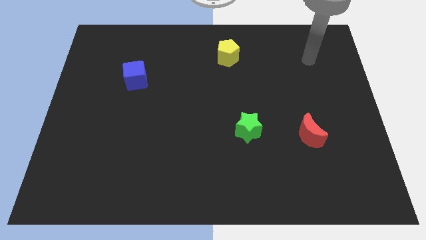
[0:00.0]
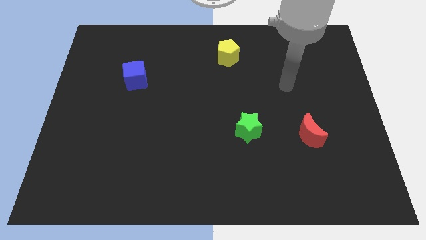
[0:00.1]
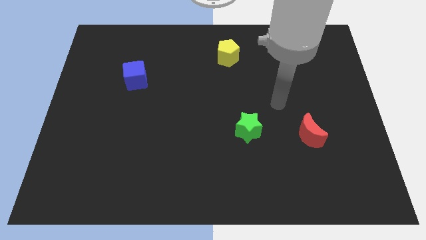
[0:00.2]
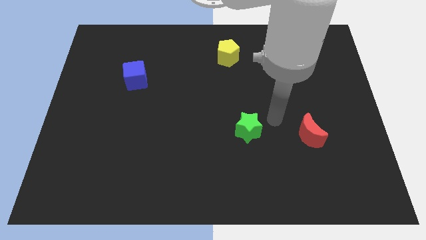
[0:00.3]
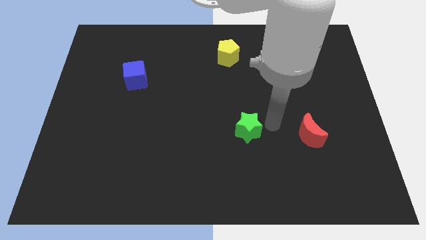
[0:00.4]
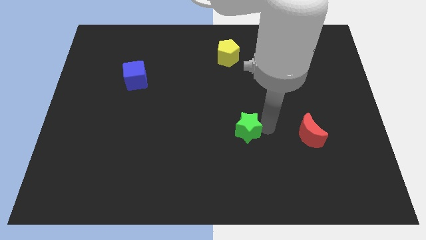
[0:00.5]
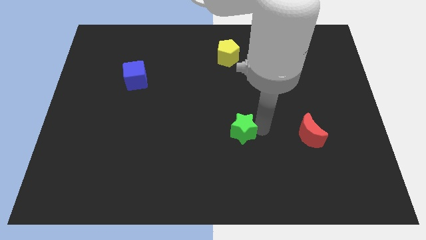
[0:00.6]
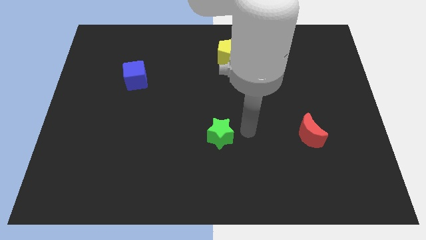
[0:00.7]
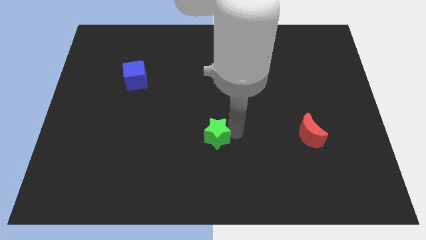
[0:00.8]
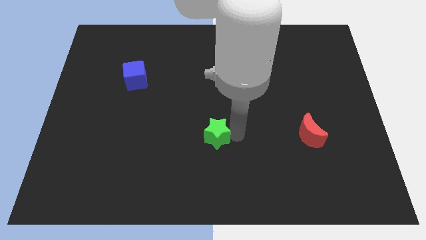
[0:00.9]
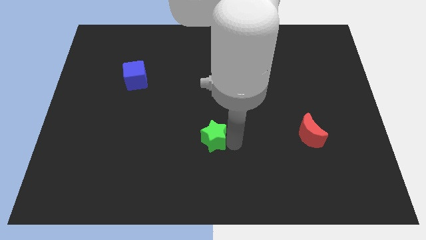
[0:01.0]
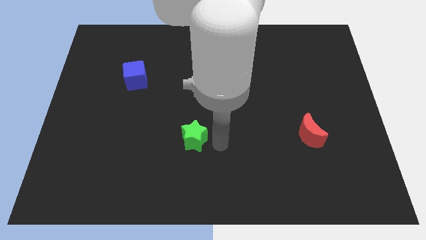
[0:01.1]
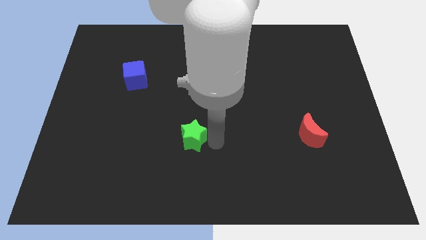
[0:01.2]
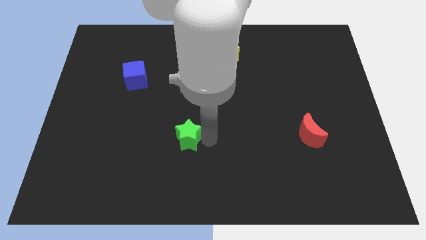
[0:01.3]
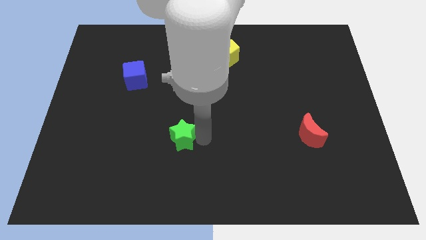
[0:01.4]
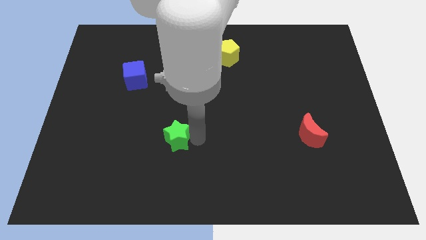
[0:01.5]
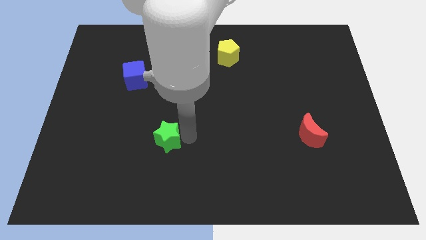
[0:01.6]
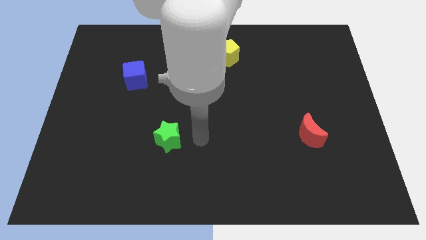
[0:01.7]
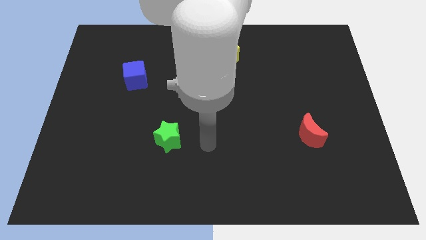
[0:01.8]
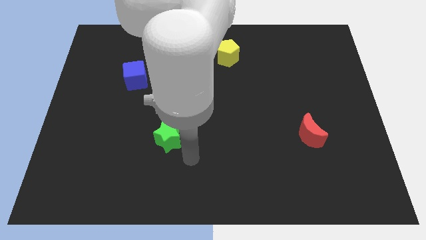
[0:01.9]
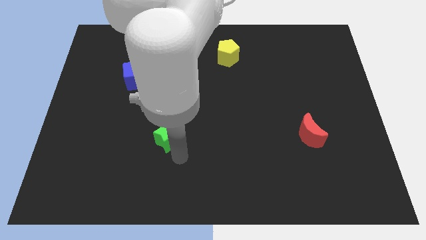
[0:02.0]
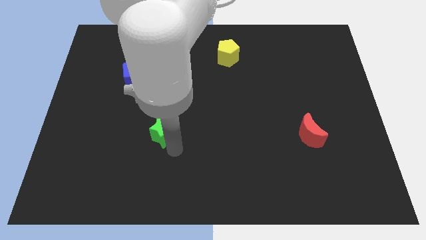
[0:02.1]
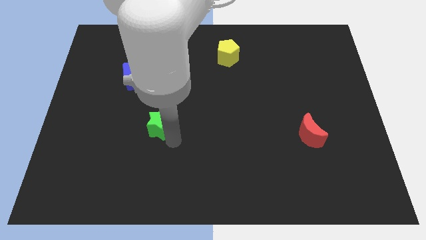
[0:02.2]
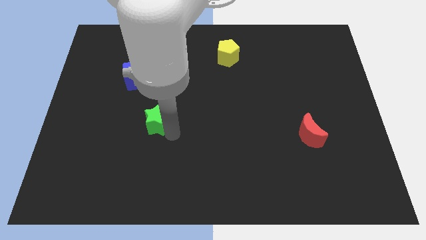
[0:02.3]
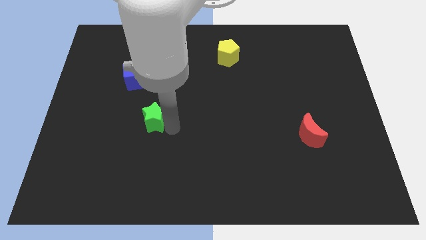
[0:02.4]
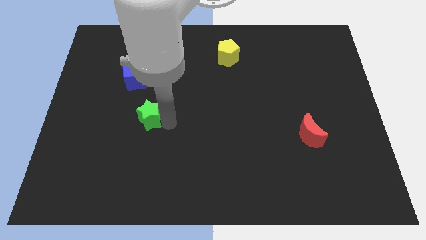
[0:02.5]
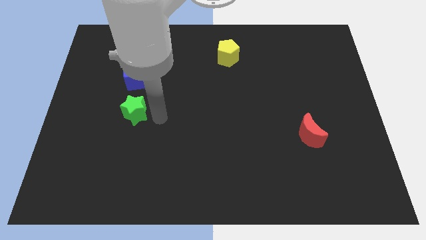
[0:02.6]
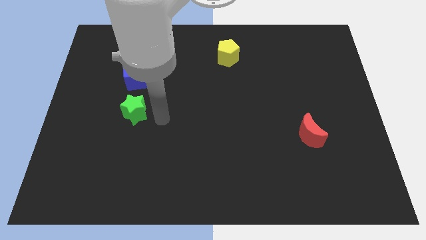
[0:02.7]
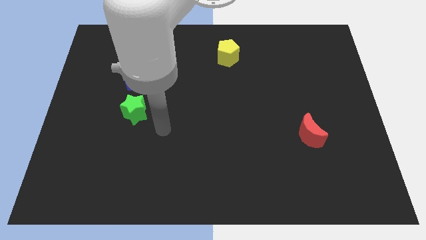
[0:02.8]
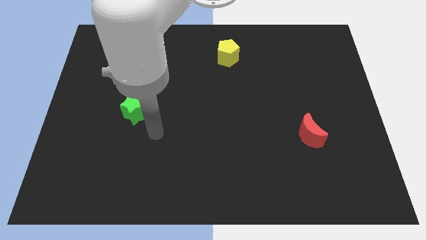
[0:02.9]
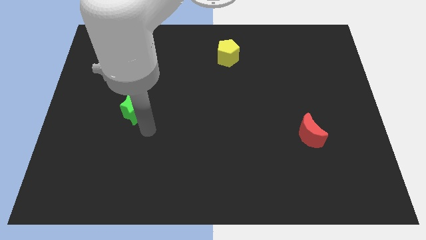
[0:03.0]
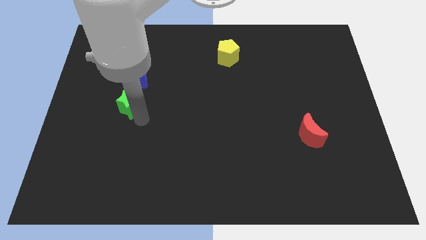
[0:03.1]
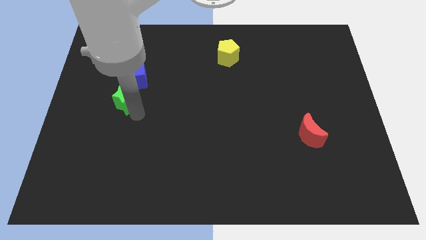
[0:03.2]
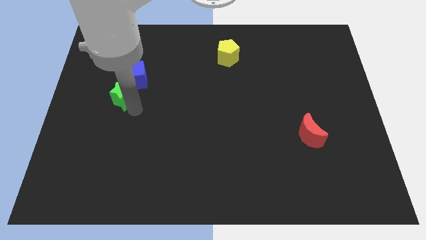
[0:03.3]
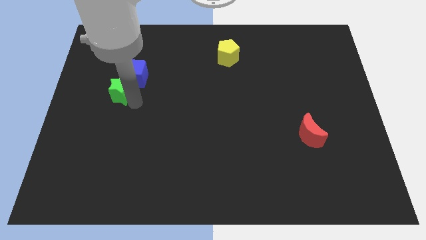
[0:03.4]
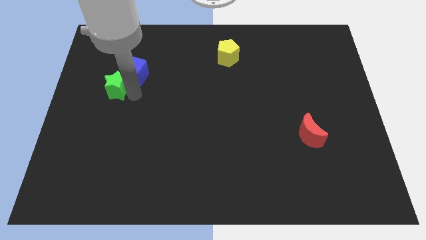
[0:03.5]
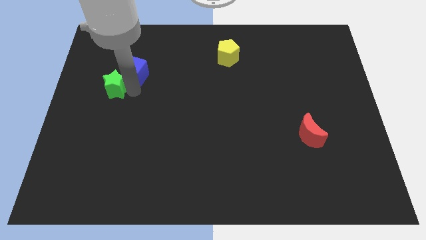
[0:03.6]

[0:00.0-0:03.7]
push the green block close to the cube

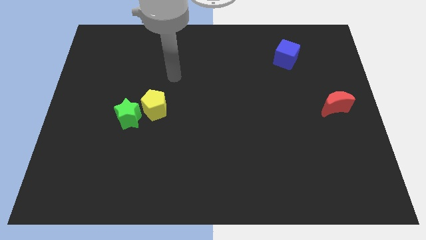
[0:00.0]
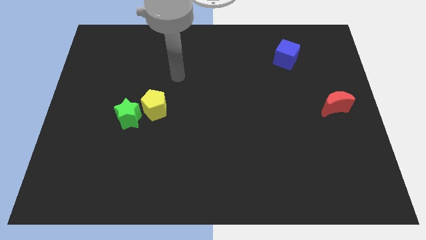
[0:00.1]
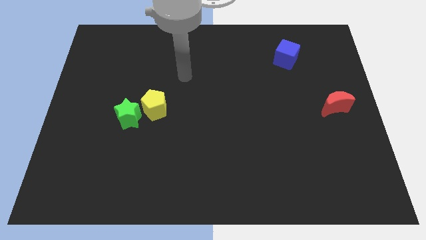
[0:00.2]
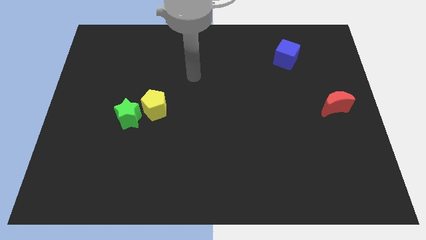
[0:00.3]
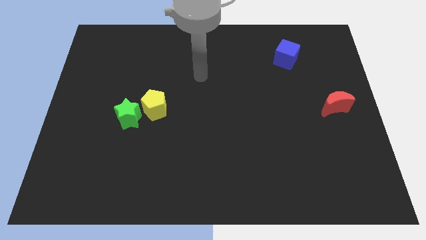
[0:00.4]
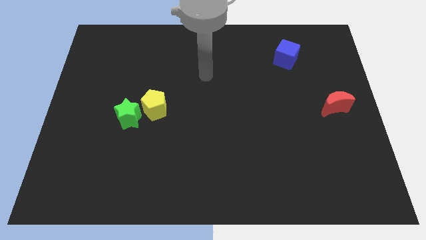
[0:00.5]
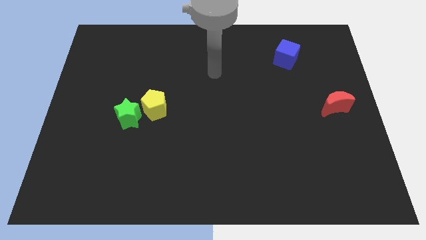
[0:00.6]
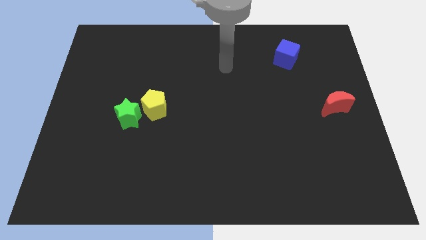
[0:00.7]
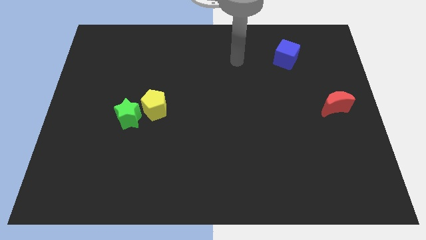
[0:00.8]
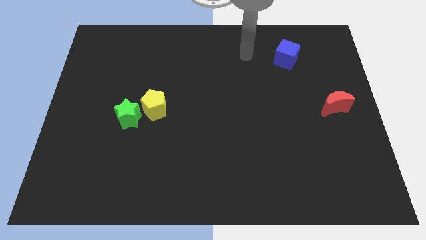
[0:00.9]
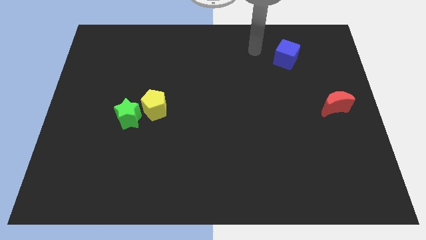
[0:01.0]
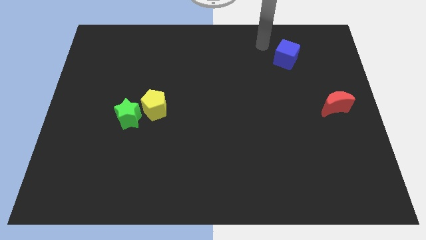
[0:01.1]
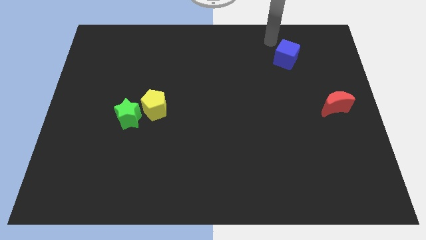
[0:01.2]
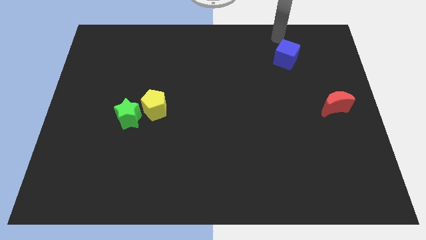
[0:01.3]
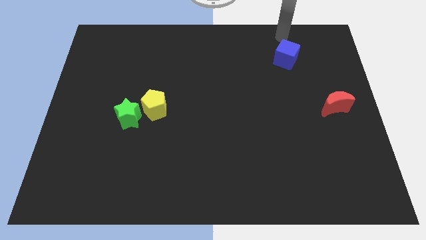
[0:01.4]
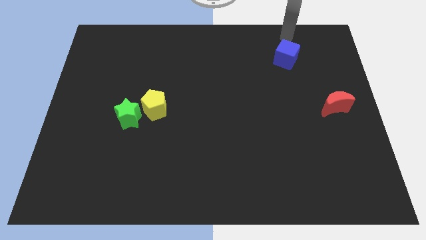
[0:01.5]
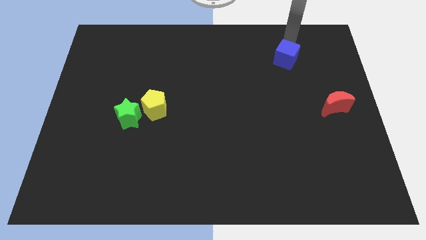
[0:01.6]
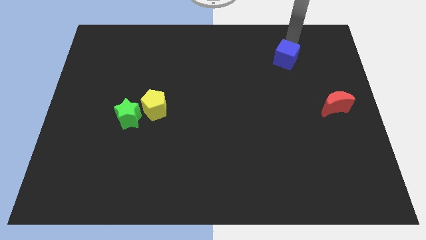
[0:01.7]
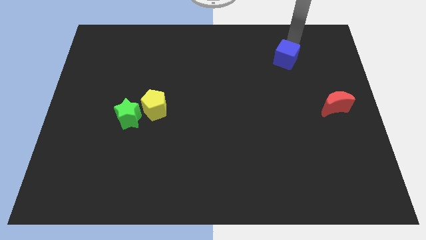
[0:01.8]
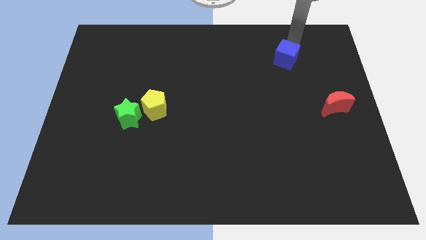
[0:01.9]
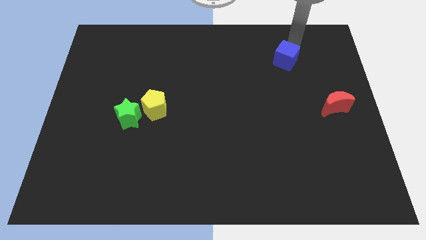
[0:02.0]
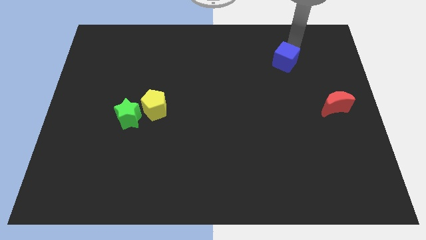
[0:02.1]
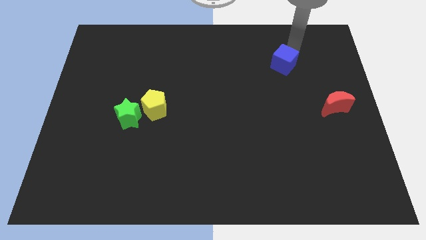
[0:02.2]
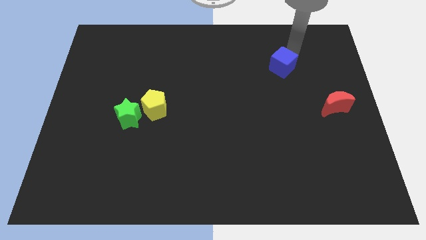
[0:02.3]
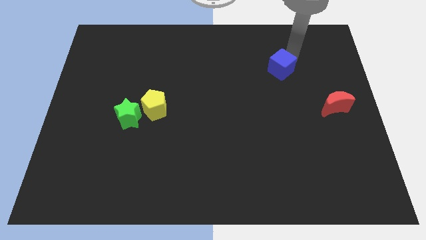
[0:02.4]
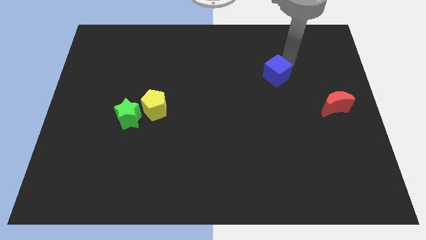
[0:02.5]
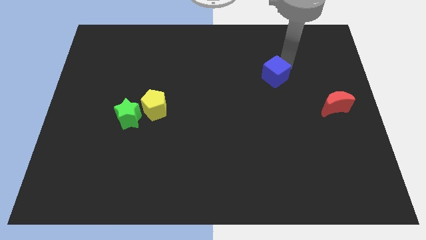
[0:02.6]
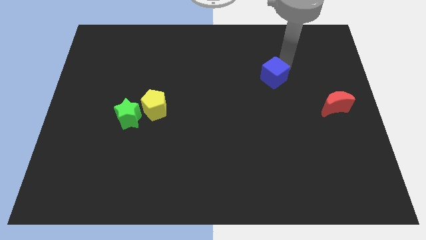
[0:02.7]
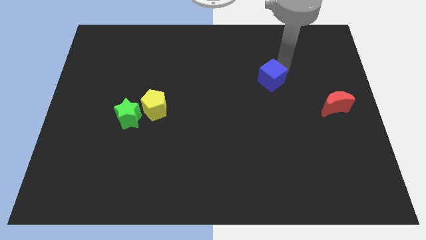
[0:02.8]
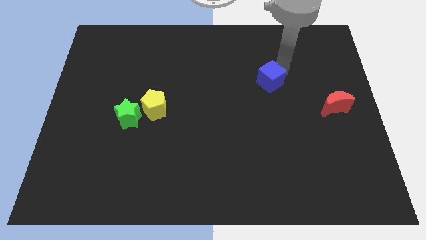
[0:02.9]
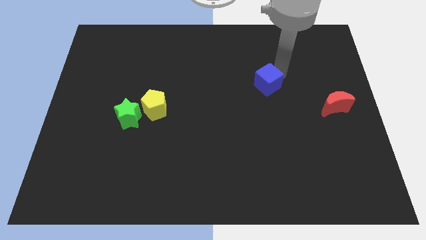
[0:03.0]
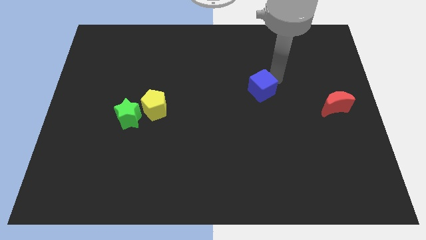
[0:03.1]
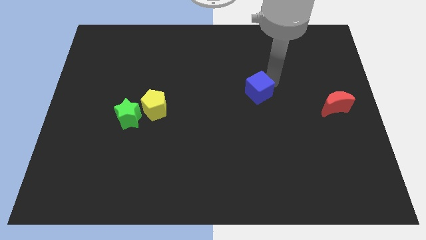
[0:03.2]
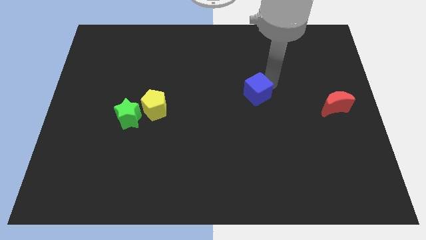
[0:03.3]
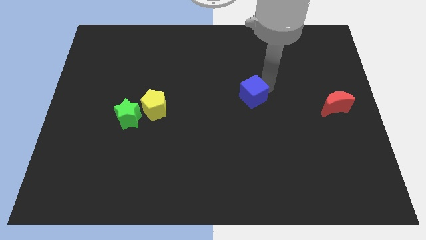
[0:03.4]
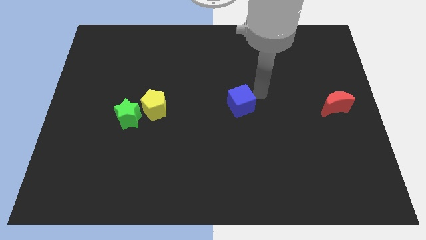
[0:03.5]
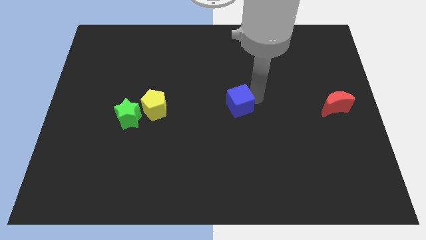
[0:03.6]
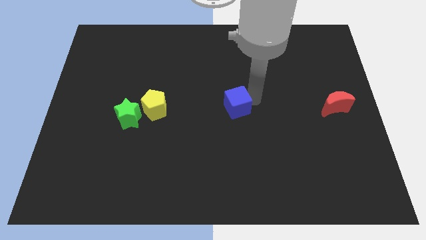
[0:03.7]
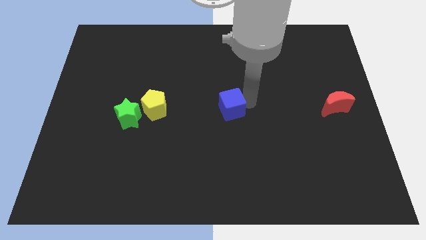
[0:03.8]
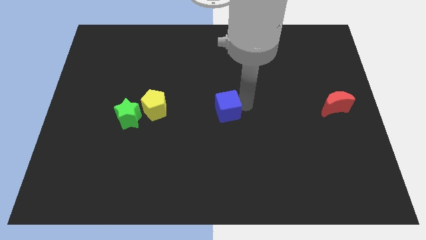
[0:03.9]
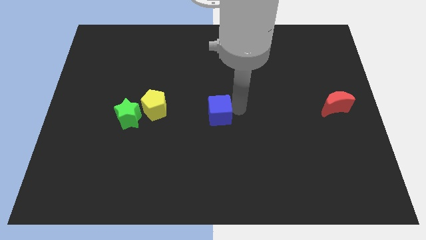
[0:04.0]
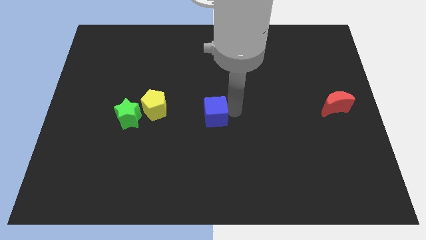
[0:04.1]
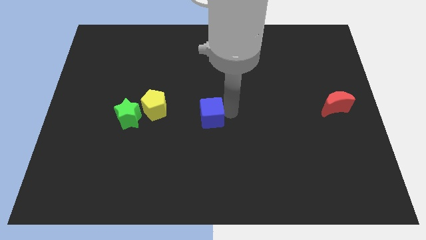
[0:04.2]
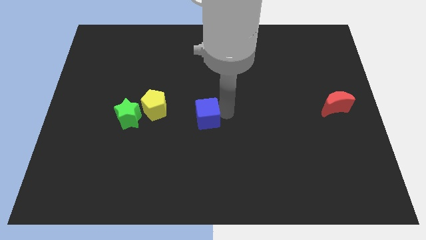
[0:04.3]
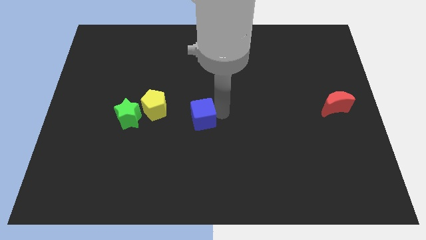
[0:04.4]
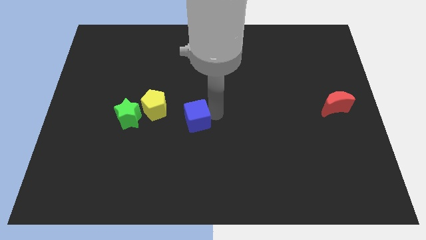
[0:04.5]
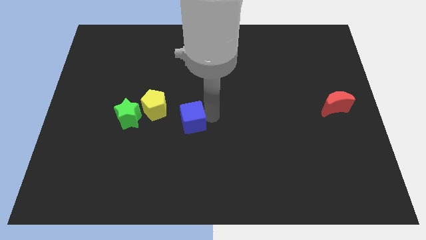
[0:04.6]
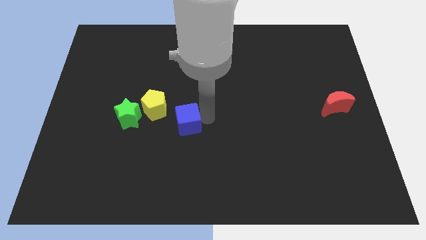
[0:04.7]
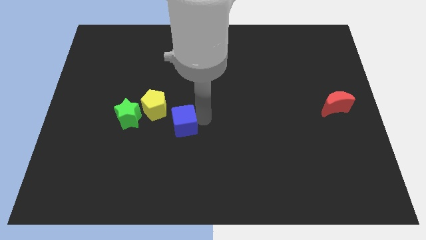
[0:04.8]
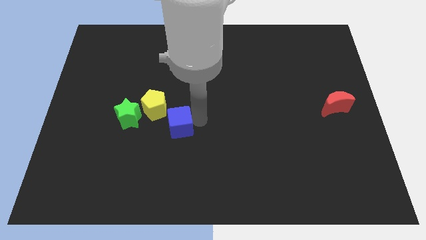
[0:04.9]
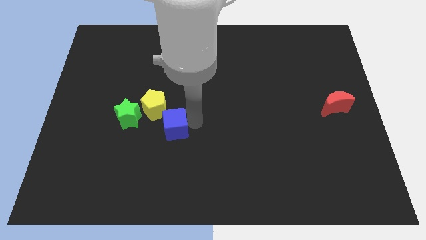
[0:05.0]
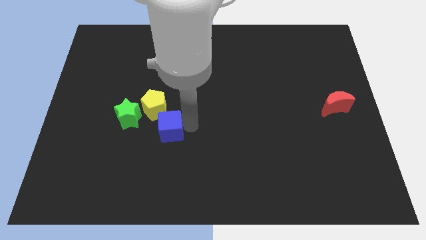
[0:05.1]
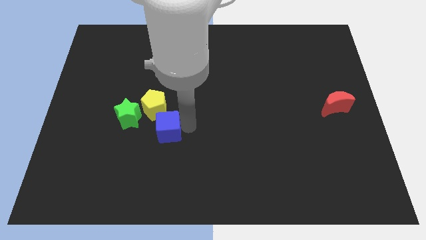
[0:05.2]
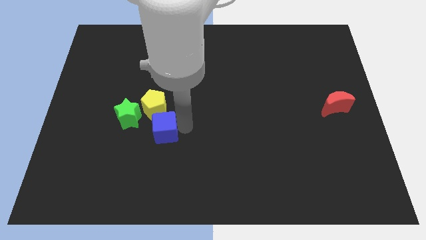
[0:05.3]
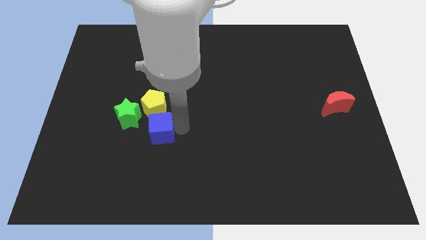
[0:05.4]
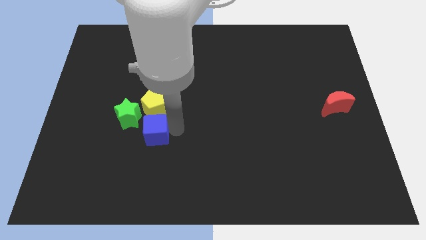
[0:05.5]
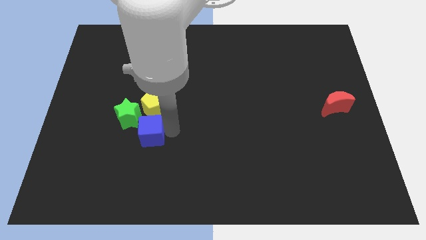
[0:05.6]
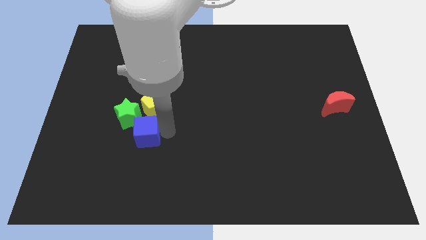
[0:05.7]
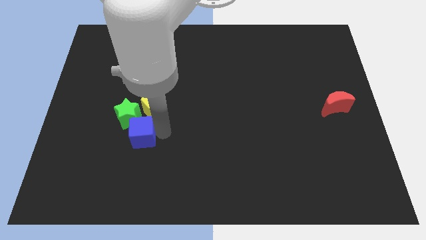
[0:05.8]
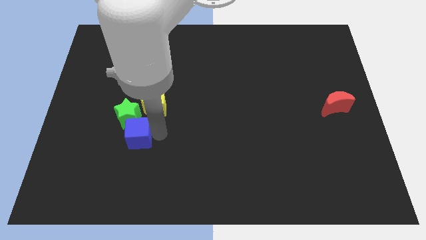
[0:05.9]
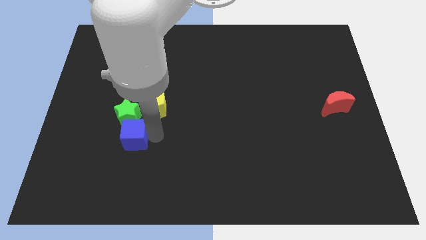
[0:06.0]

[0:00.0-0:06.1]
put the cube close to the green block
